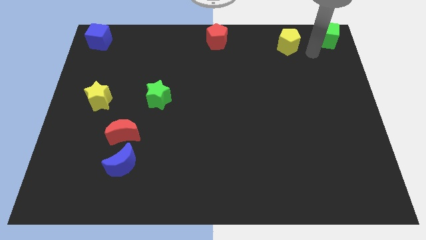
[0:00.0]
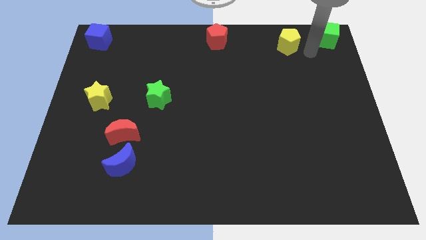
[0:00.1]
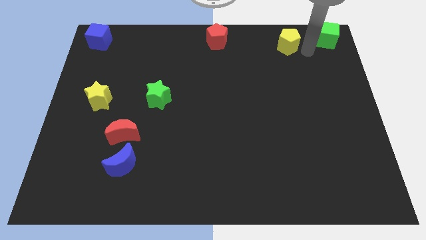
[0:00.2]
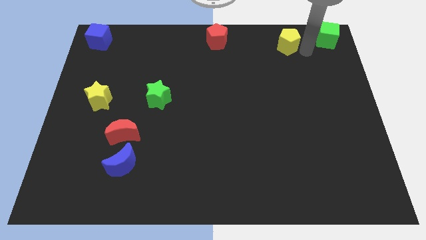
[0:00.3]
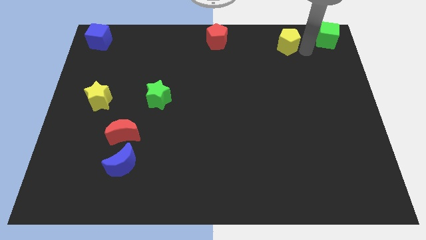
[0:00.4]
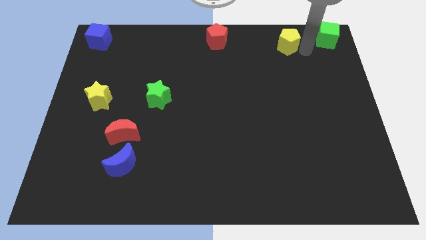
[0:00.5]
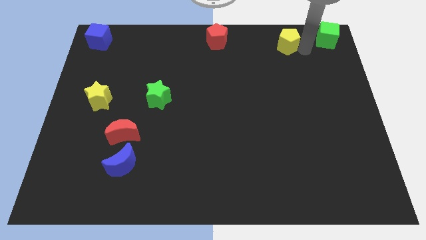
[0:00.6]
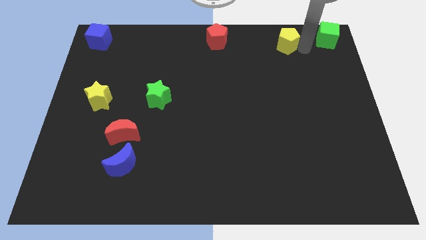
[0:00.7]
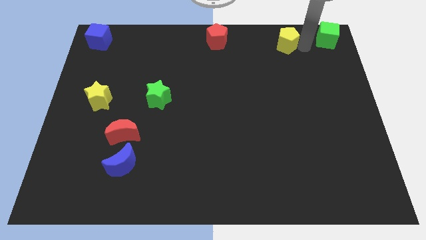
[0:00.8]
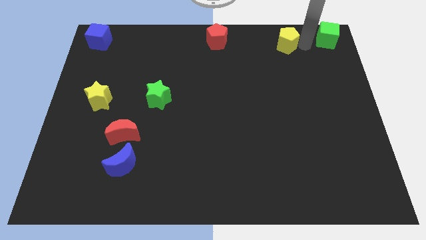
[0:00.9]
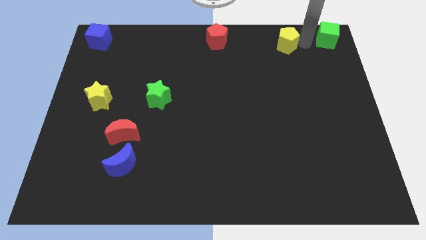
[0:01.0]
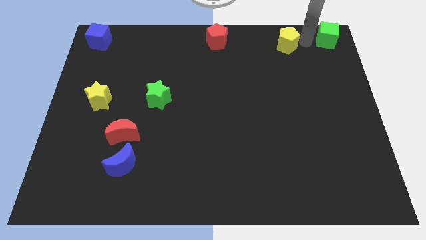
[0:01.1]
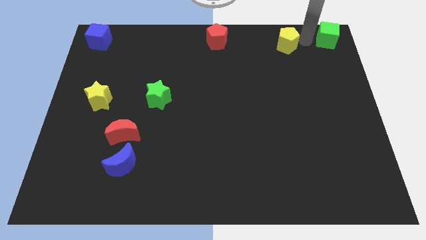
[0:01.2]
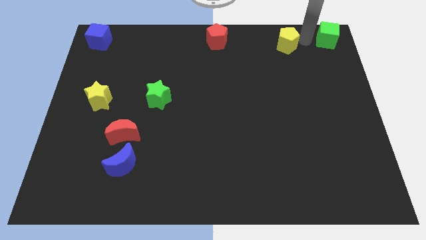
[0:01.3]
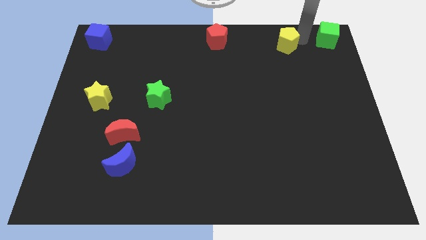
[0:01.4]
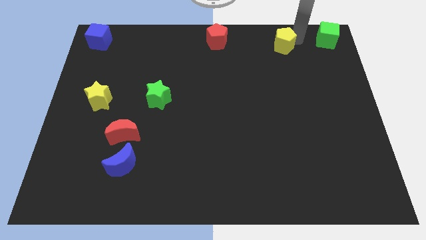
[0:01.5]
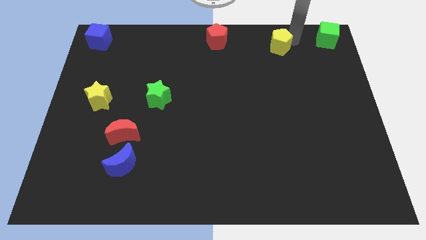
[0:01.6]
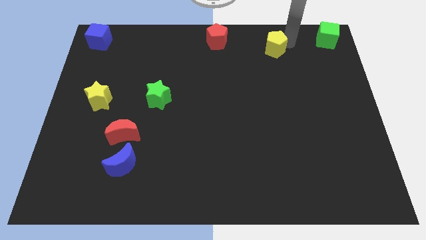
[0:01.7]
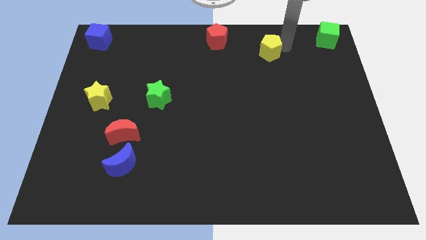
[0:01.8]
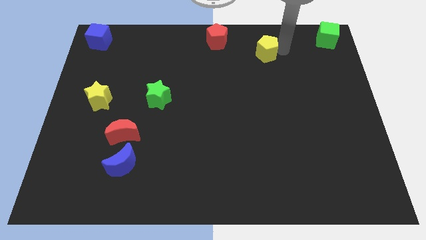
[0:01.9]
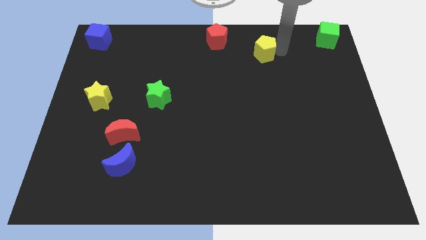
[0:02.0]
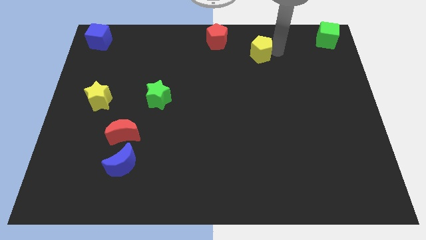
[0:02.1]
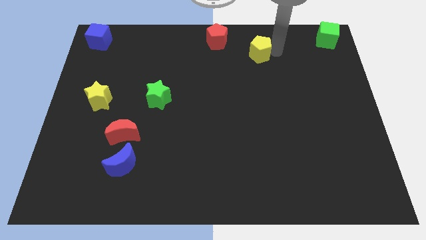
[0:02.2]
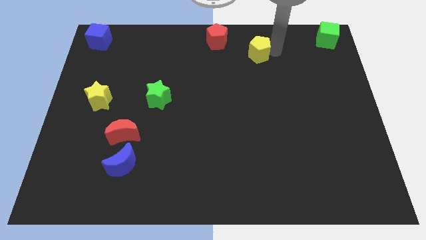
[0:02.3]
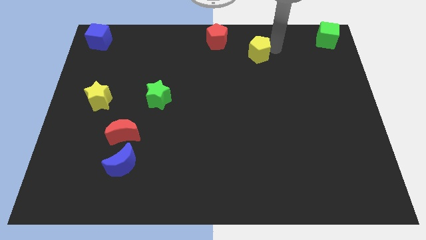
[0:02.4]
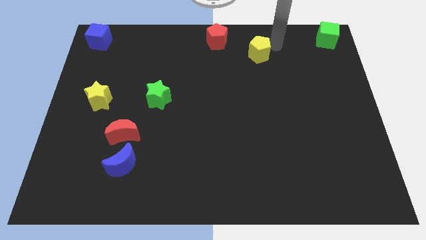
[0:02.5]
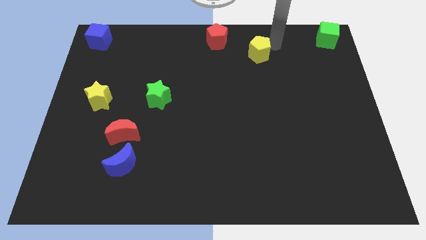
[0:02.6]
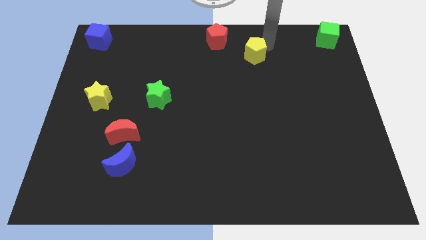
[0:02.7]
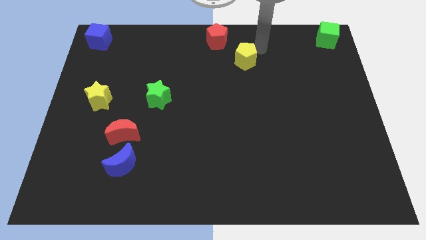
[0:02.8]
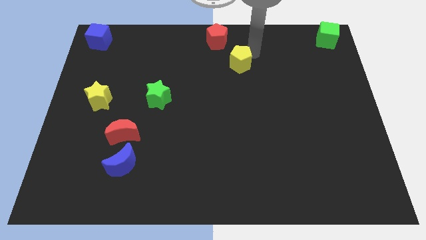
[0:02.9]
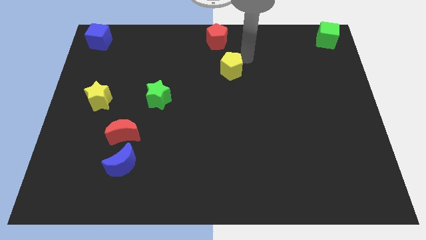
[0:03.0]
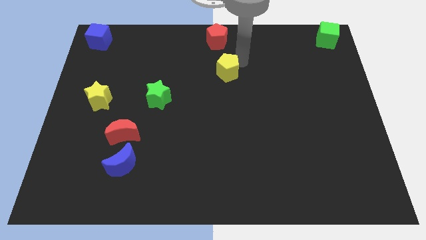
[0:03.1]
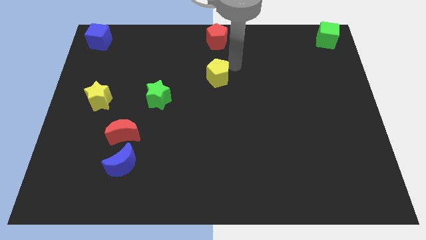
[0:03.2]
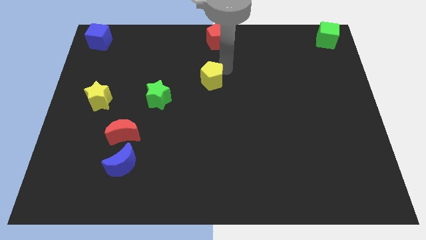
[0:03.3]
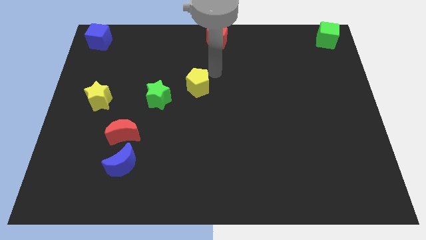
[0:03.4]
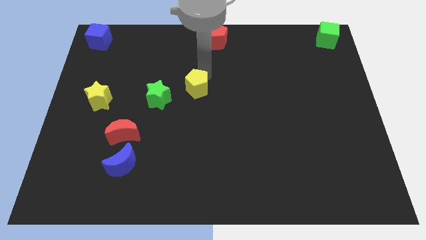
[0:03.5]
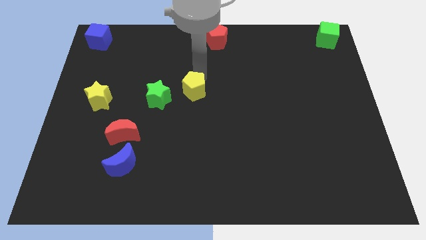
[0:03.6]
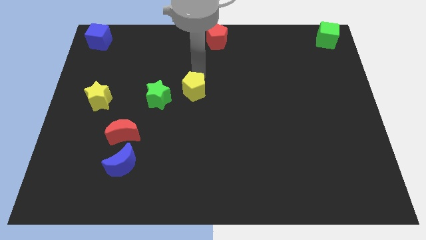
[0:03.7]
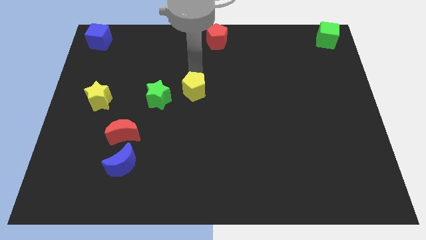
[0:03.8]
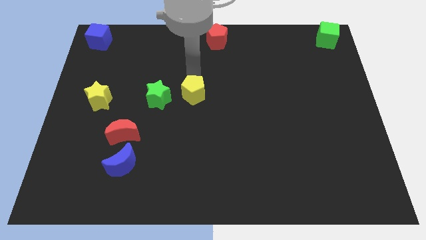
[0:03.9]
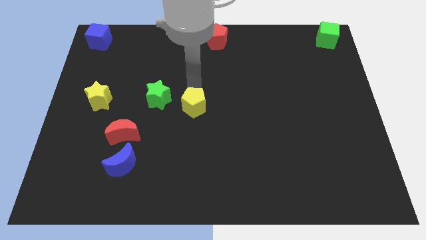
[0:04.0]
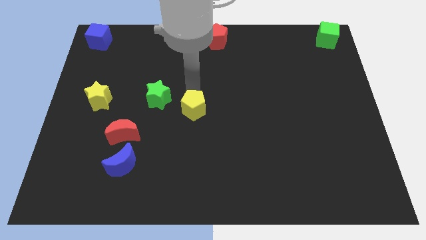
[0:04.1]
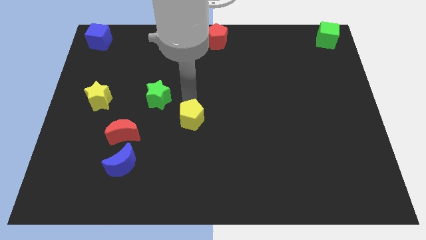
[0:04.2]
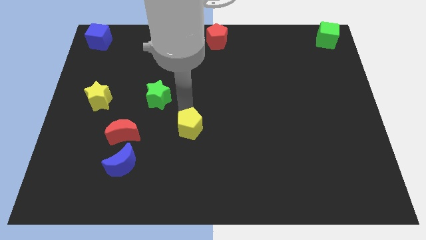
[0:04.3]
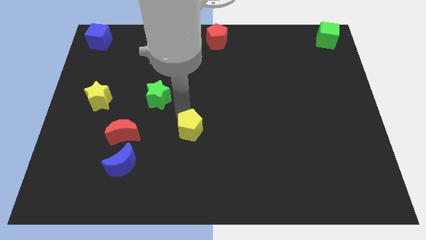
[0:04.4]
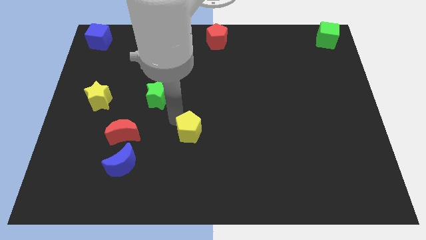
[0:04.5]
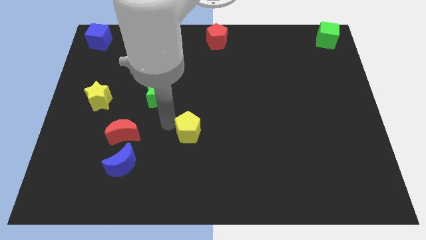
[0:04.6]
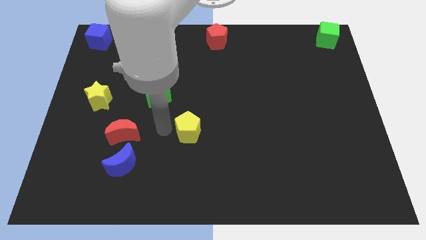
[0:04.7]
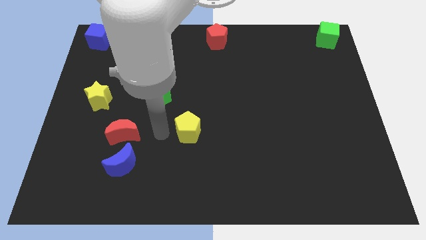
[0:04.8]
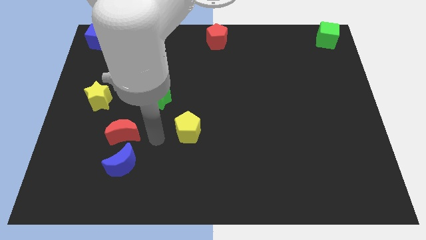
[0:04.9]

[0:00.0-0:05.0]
place the yellow pentagon slightly towards the center of the board

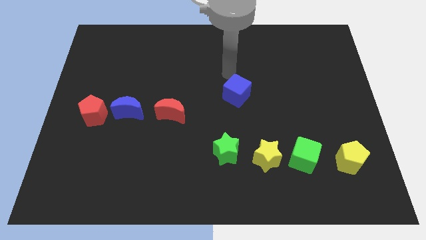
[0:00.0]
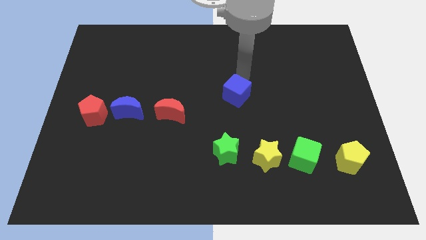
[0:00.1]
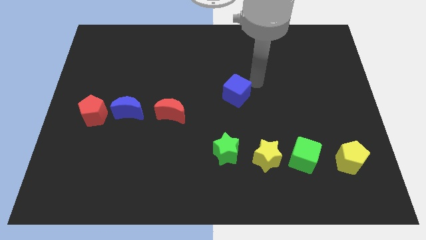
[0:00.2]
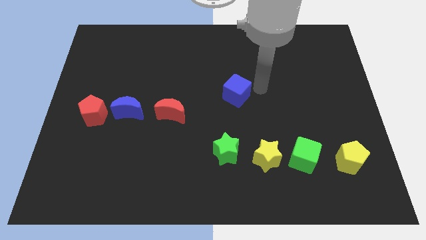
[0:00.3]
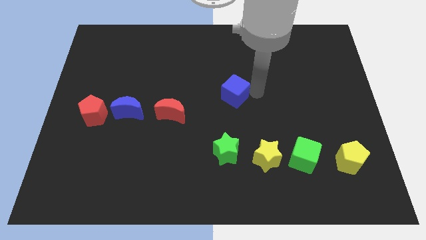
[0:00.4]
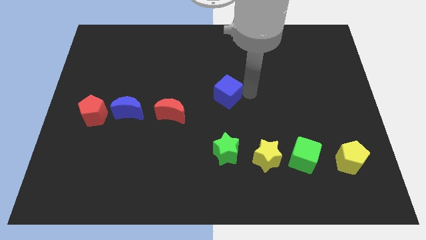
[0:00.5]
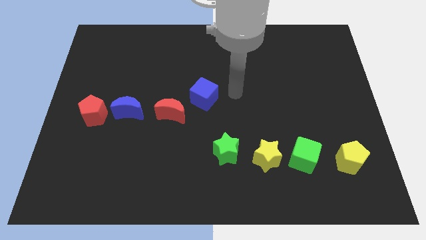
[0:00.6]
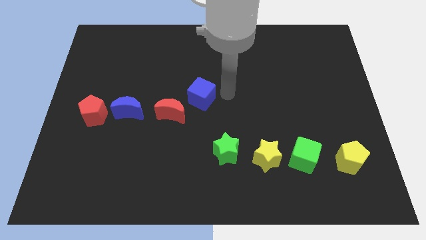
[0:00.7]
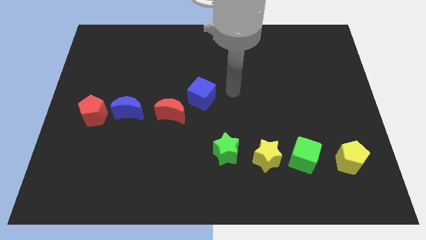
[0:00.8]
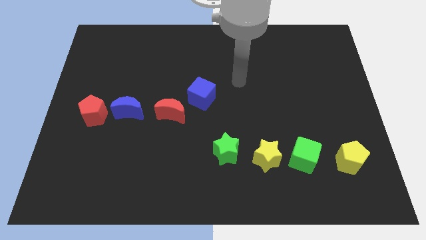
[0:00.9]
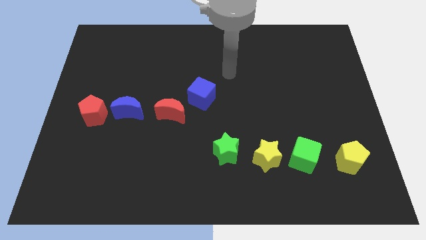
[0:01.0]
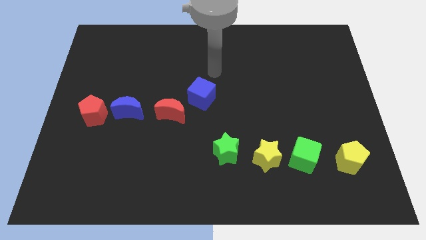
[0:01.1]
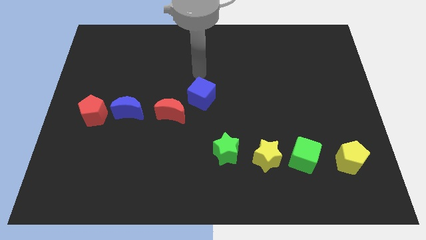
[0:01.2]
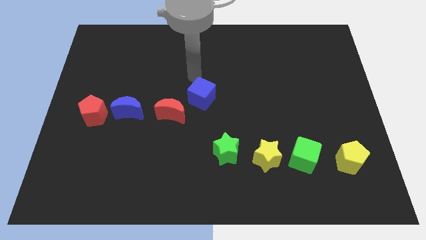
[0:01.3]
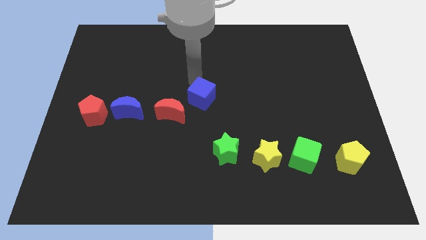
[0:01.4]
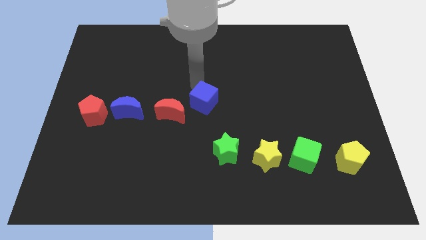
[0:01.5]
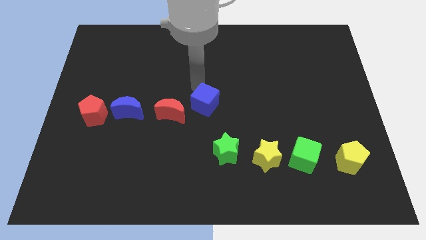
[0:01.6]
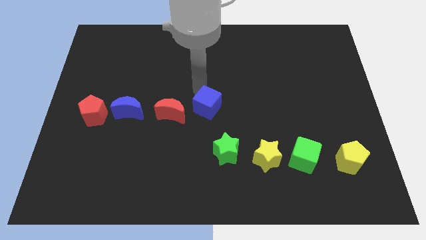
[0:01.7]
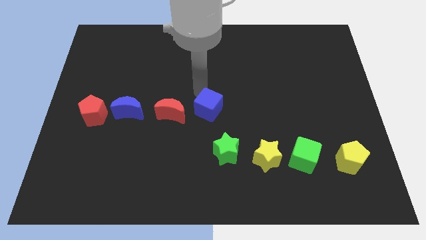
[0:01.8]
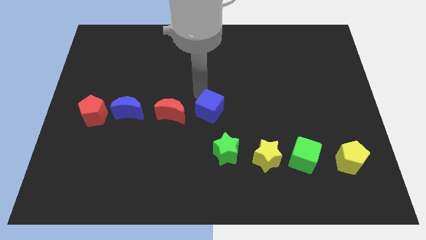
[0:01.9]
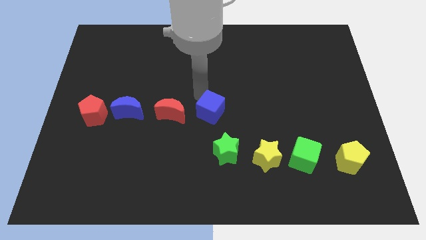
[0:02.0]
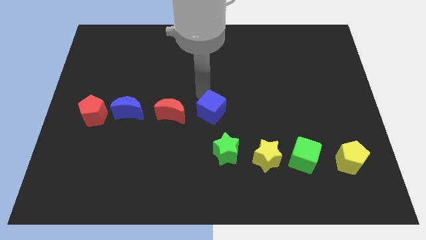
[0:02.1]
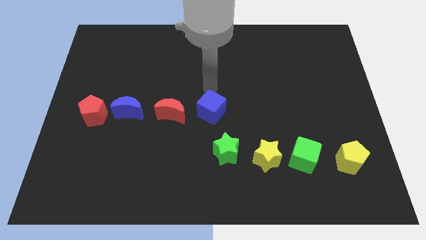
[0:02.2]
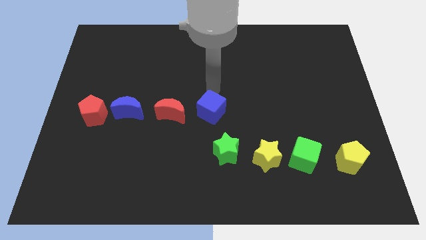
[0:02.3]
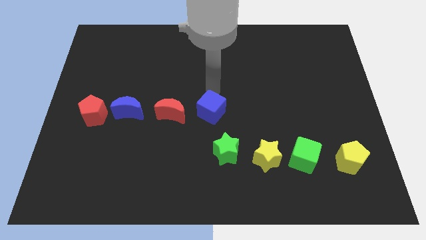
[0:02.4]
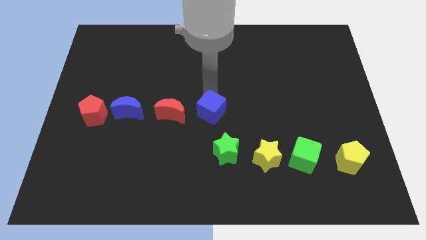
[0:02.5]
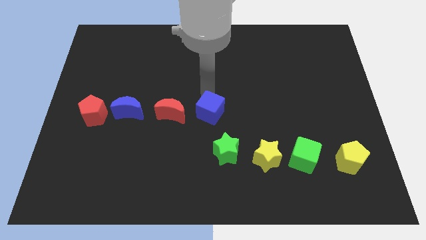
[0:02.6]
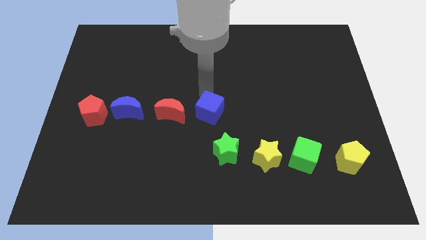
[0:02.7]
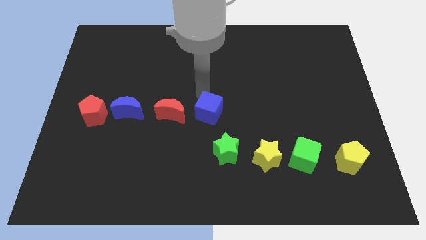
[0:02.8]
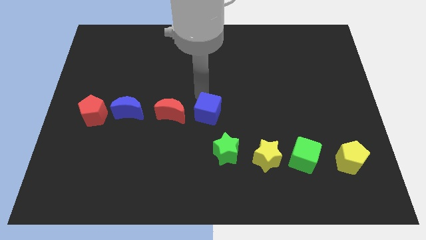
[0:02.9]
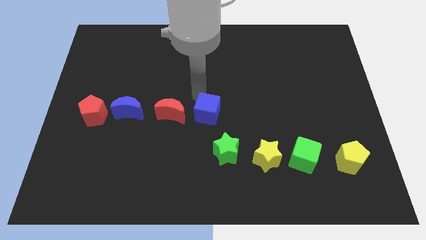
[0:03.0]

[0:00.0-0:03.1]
move the blue cube right to the red crescent

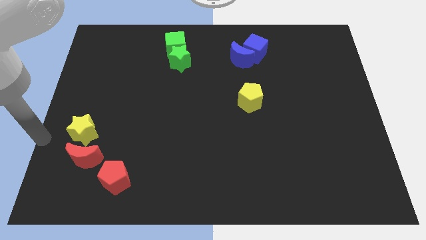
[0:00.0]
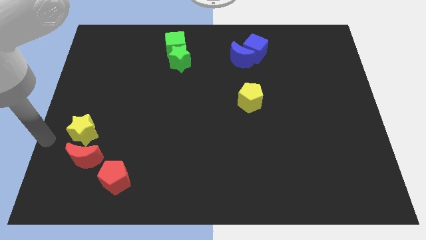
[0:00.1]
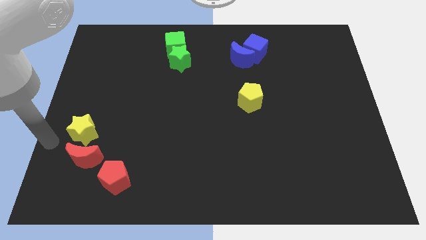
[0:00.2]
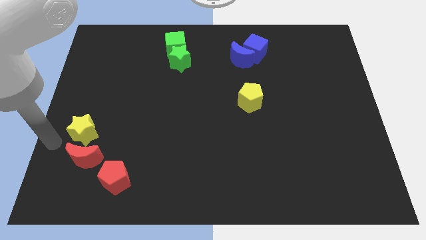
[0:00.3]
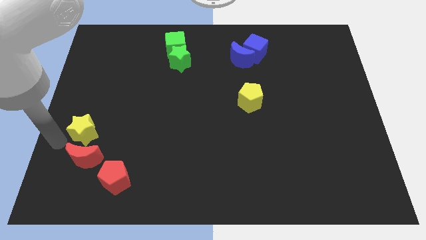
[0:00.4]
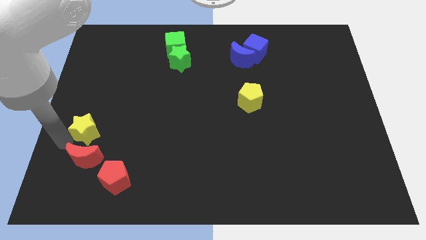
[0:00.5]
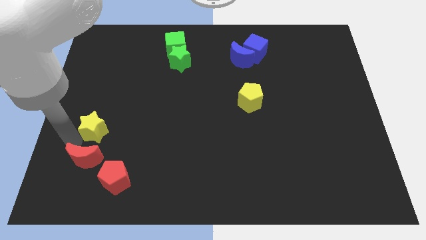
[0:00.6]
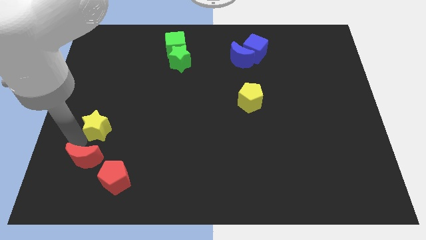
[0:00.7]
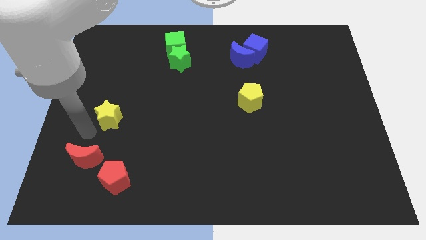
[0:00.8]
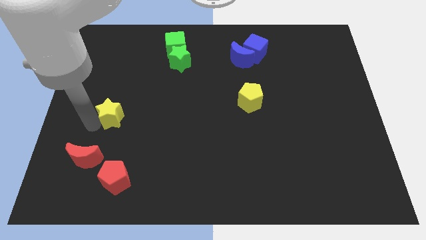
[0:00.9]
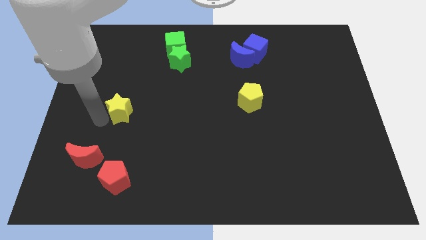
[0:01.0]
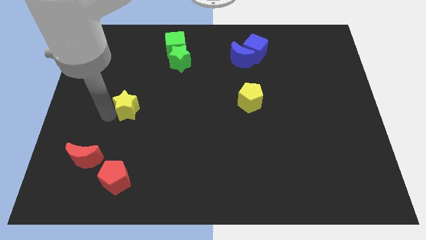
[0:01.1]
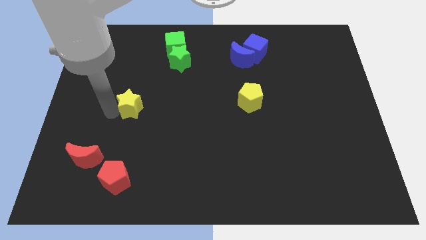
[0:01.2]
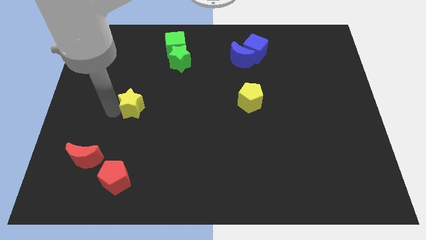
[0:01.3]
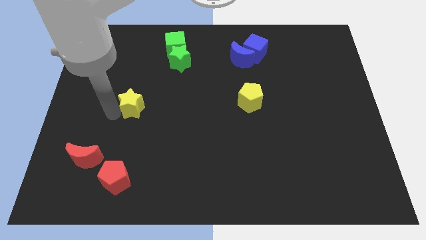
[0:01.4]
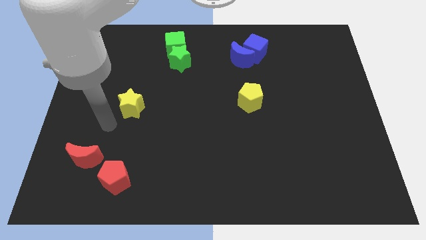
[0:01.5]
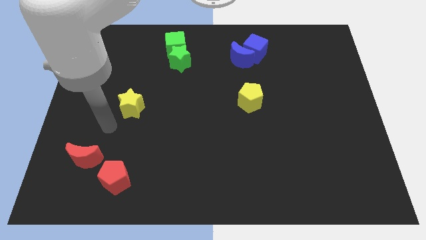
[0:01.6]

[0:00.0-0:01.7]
seperate yellow star and red moon
